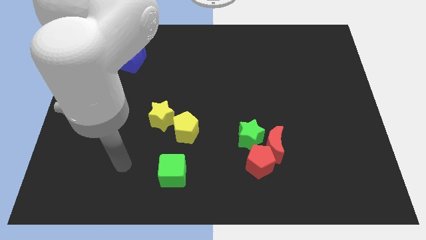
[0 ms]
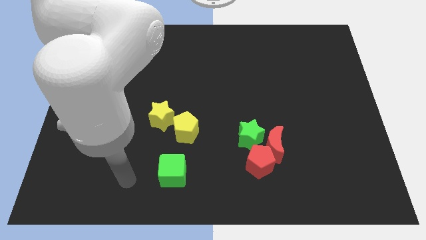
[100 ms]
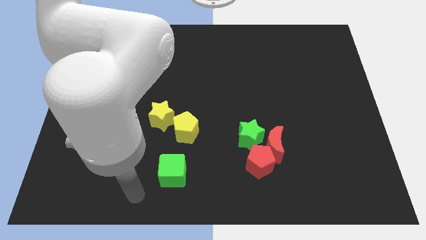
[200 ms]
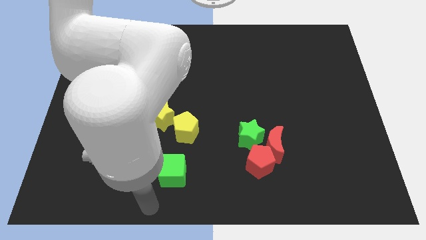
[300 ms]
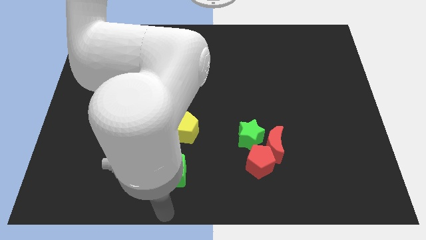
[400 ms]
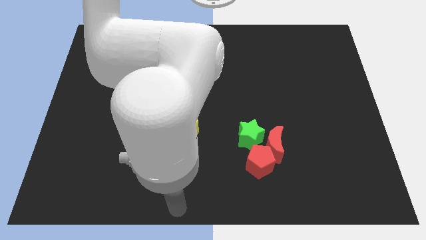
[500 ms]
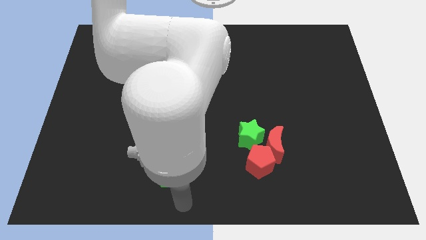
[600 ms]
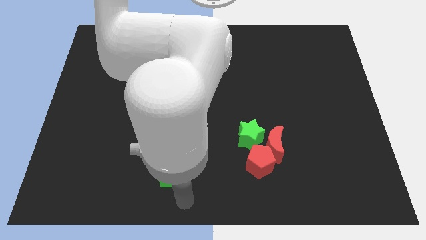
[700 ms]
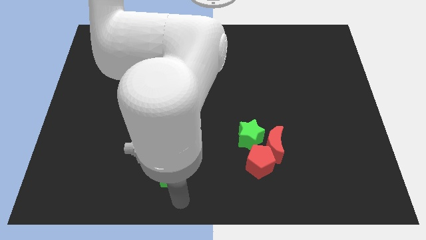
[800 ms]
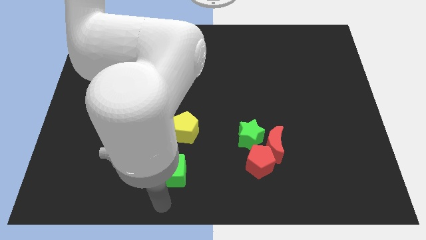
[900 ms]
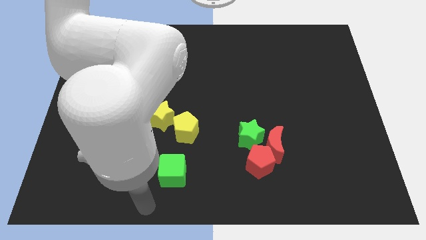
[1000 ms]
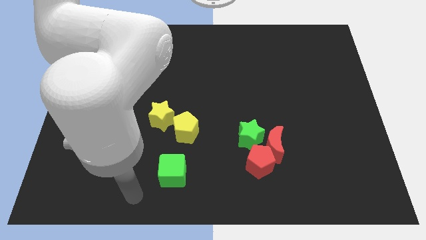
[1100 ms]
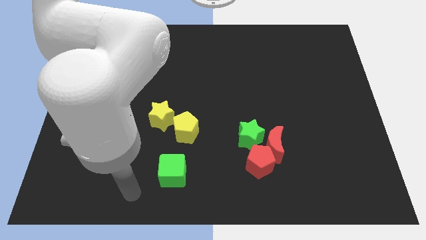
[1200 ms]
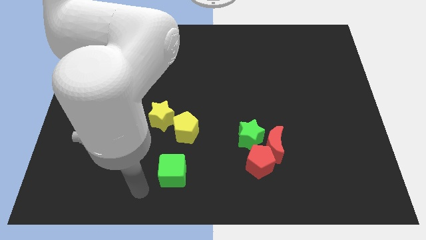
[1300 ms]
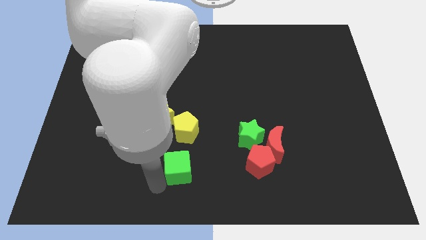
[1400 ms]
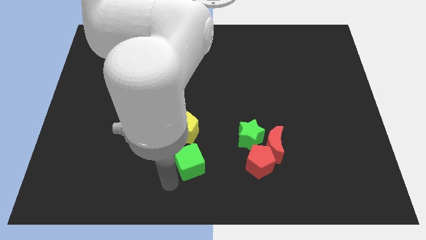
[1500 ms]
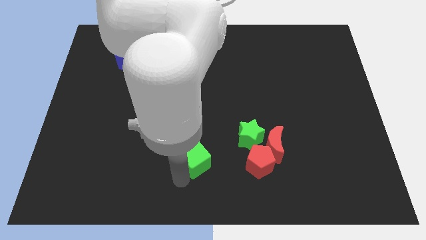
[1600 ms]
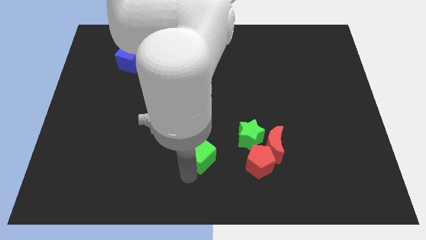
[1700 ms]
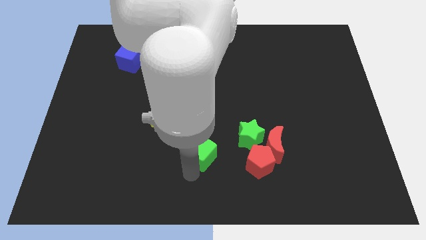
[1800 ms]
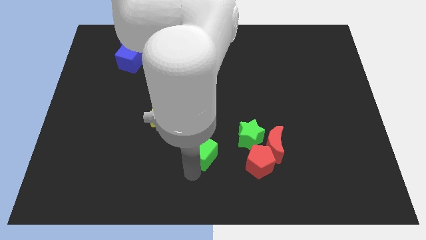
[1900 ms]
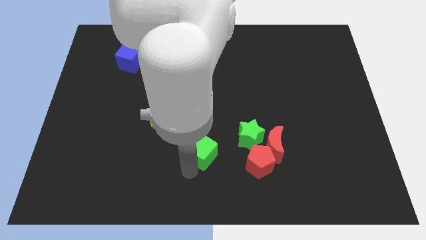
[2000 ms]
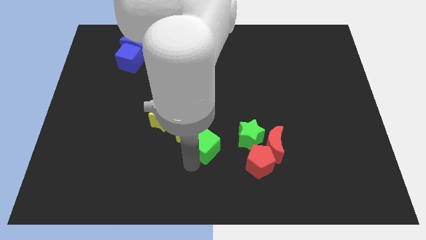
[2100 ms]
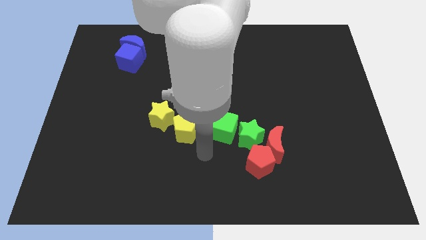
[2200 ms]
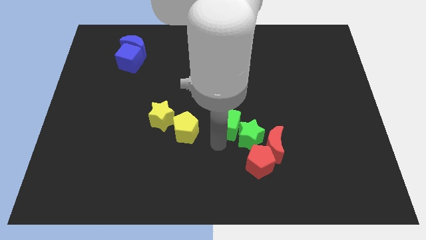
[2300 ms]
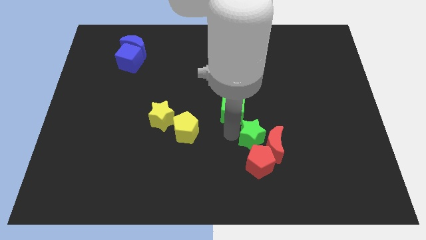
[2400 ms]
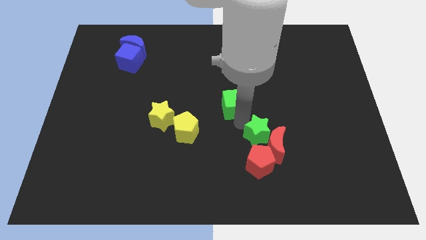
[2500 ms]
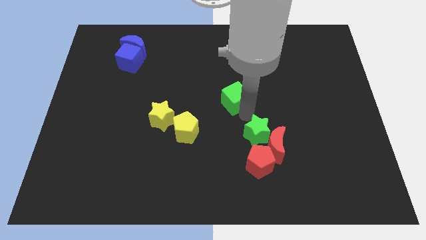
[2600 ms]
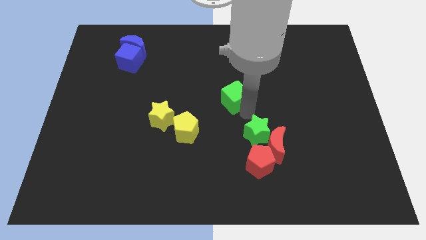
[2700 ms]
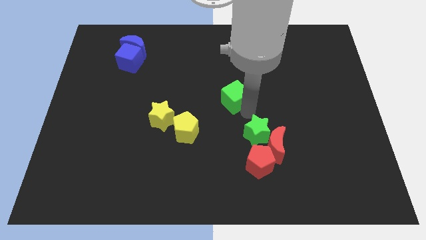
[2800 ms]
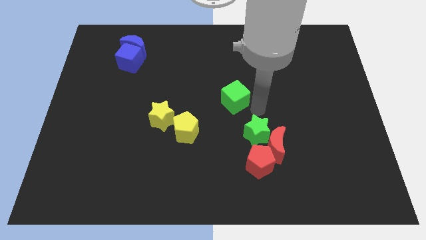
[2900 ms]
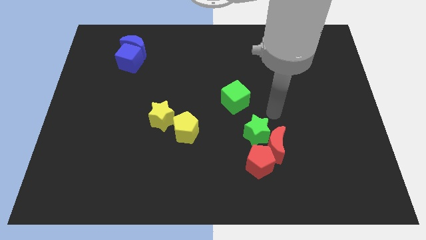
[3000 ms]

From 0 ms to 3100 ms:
place the green cube towards the top left side of the green star

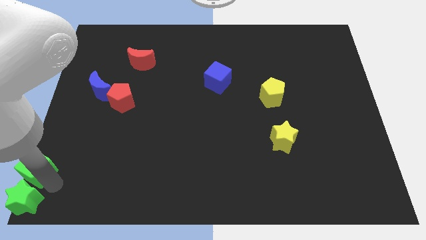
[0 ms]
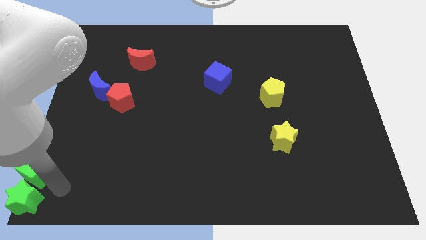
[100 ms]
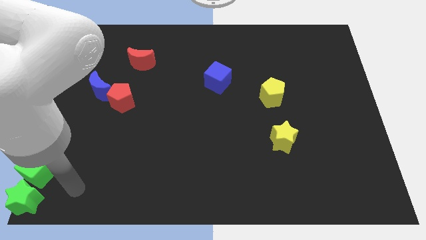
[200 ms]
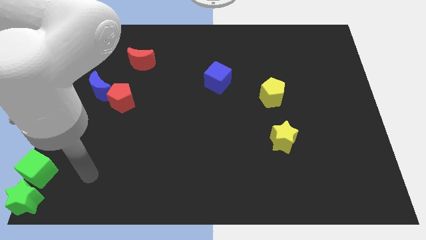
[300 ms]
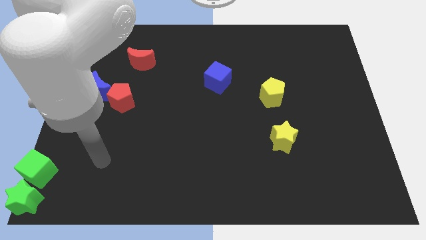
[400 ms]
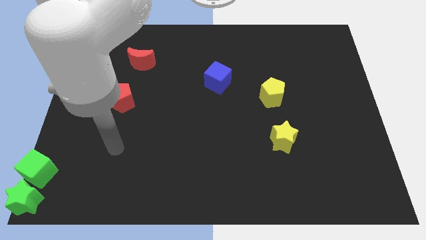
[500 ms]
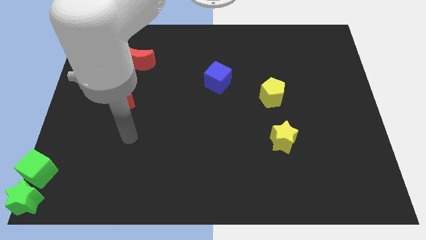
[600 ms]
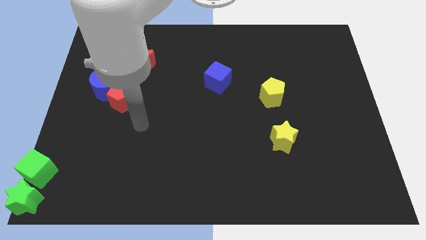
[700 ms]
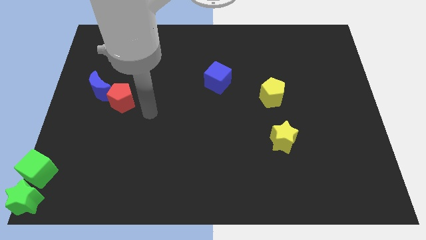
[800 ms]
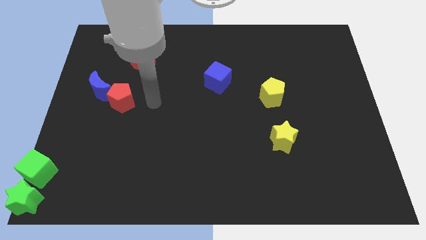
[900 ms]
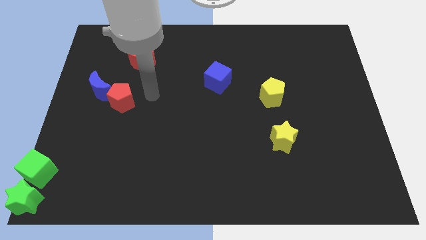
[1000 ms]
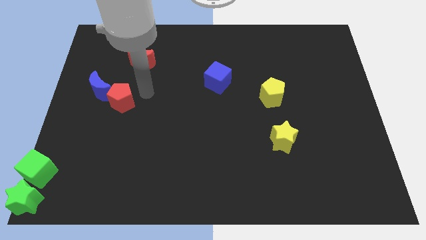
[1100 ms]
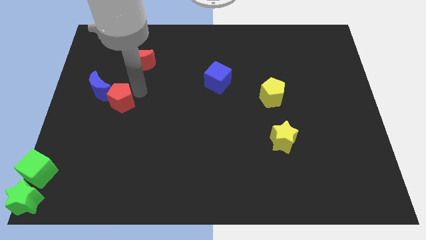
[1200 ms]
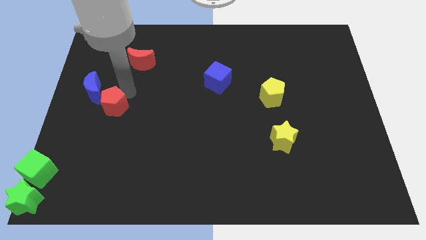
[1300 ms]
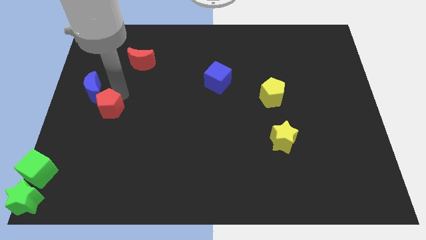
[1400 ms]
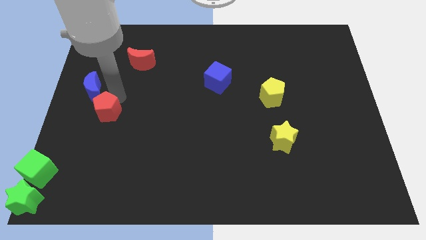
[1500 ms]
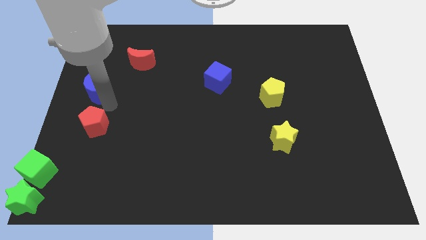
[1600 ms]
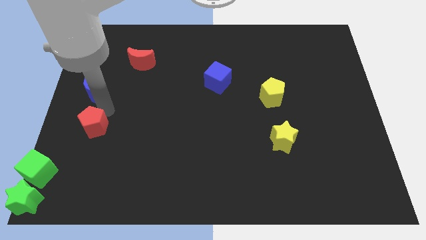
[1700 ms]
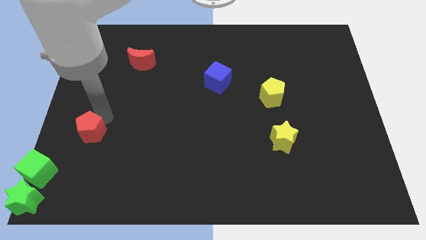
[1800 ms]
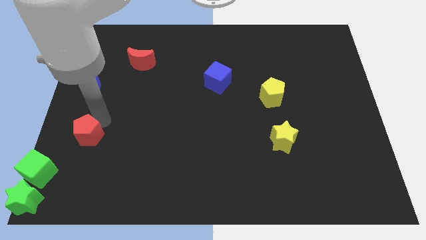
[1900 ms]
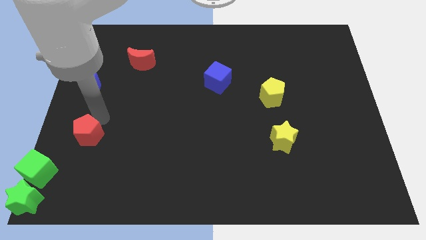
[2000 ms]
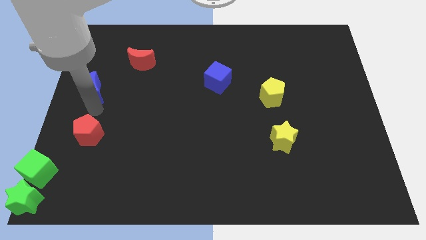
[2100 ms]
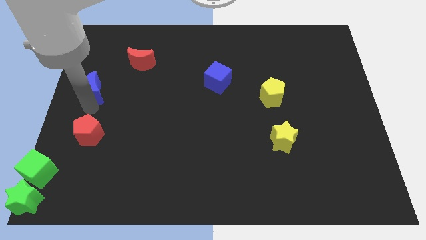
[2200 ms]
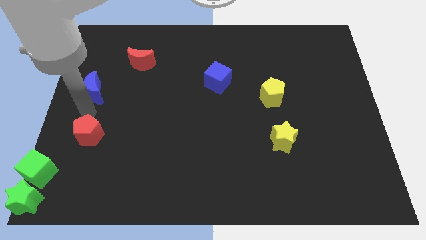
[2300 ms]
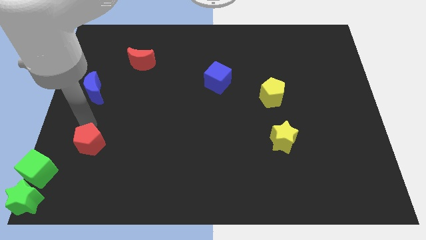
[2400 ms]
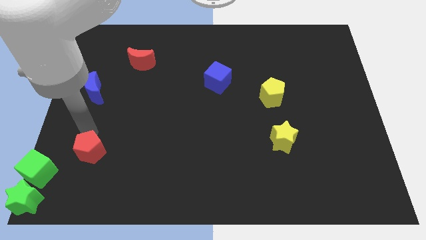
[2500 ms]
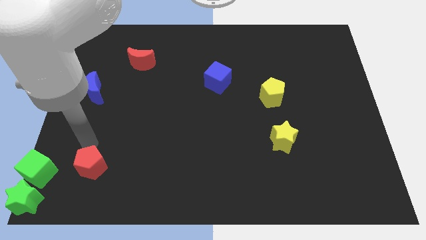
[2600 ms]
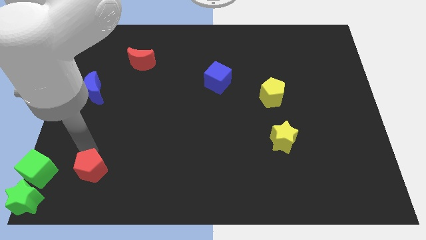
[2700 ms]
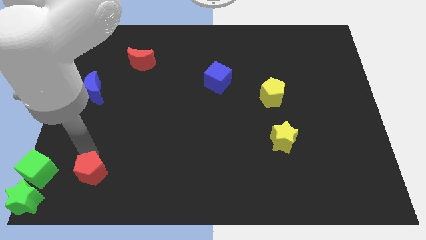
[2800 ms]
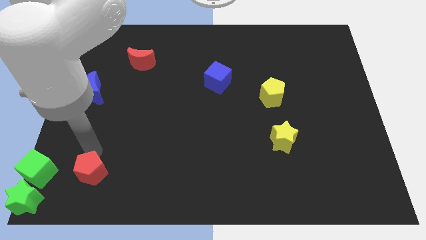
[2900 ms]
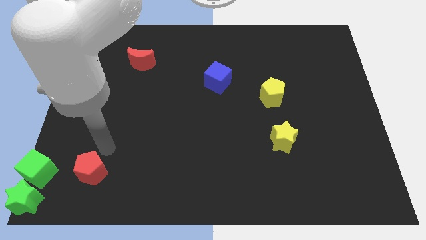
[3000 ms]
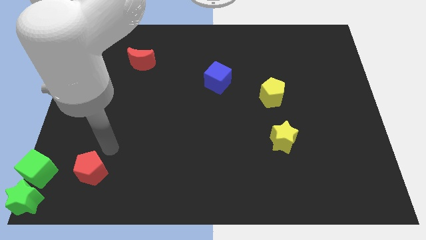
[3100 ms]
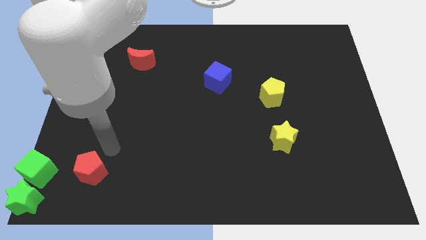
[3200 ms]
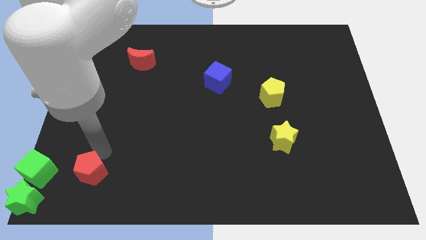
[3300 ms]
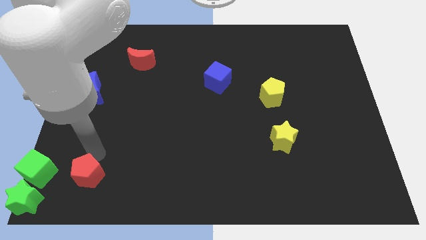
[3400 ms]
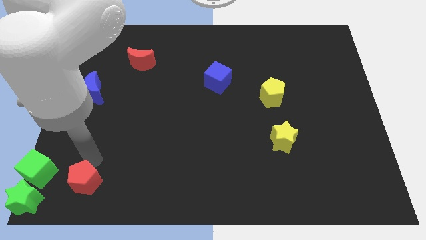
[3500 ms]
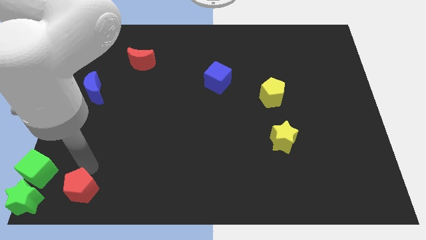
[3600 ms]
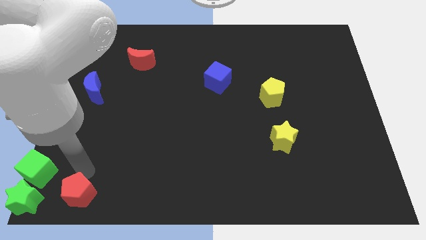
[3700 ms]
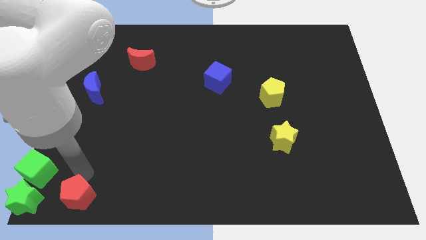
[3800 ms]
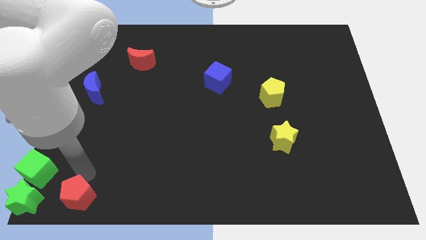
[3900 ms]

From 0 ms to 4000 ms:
separate the red pentagon from the blue moon

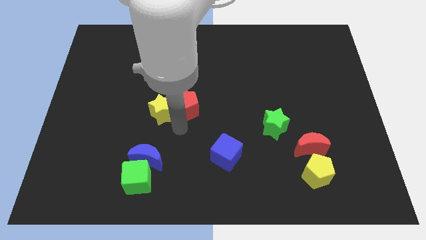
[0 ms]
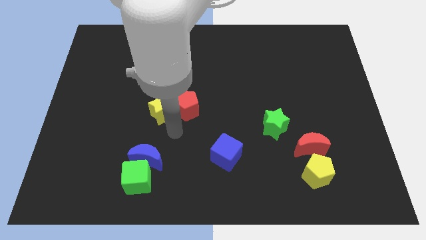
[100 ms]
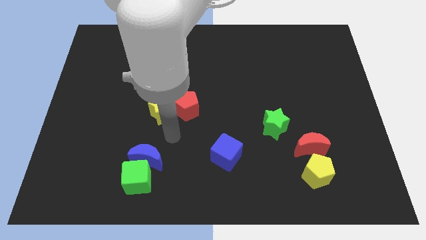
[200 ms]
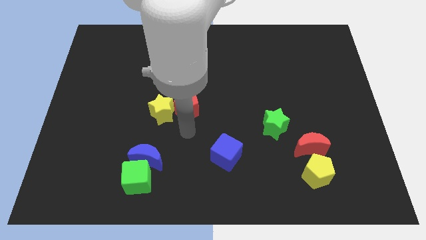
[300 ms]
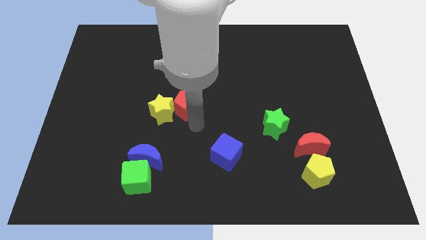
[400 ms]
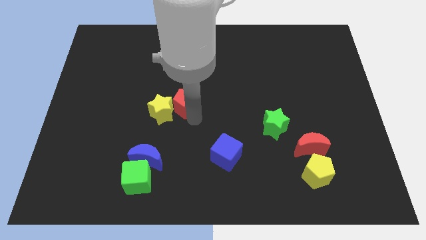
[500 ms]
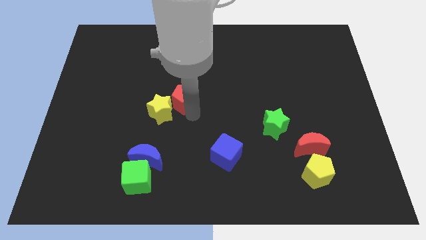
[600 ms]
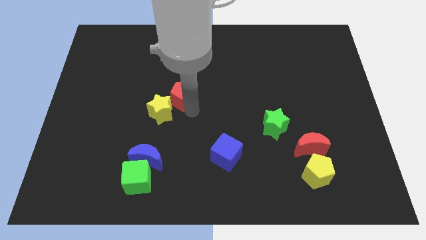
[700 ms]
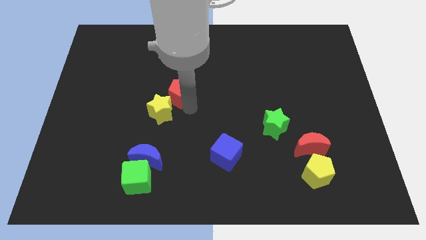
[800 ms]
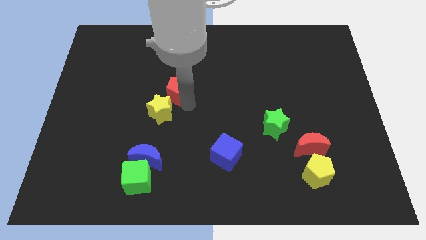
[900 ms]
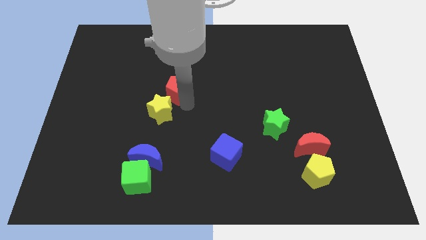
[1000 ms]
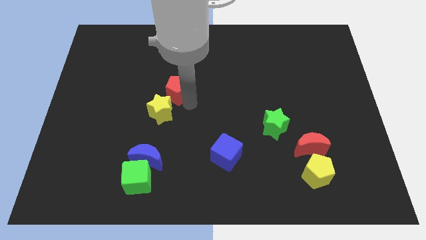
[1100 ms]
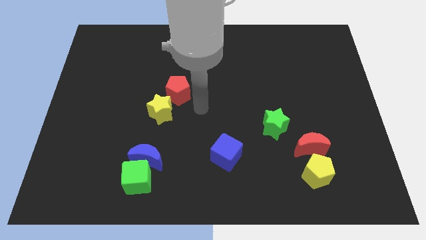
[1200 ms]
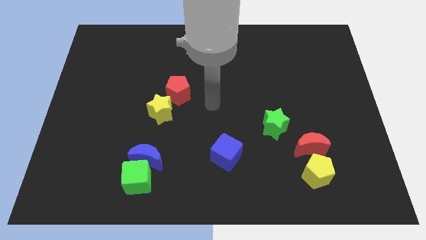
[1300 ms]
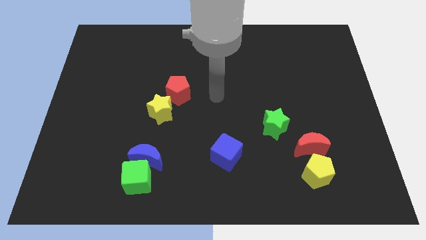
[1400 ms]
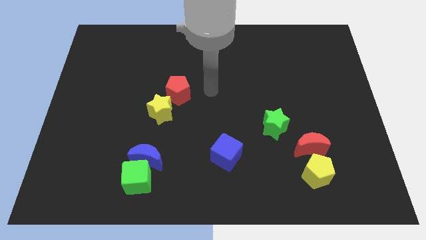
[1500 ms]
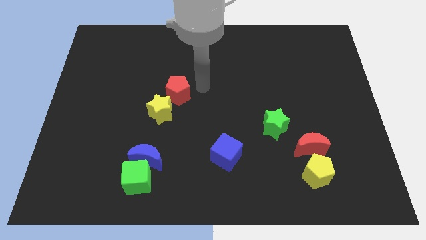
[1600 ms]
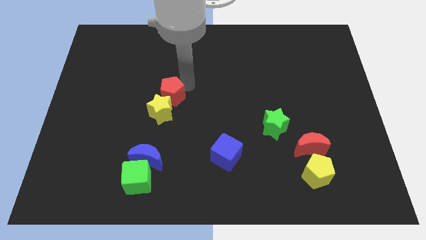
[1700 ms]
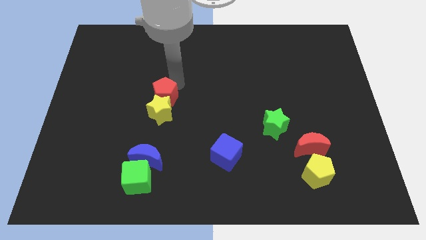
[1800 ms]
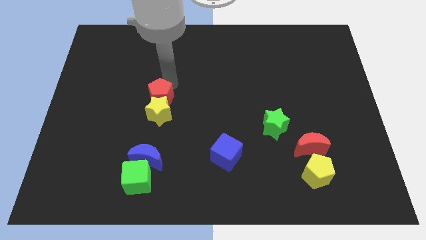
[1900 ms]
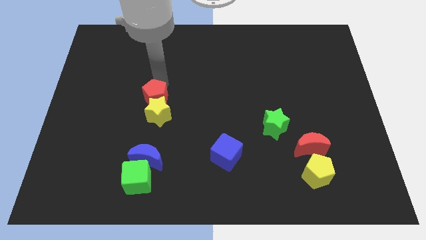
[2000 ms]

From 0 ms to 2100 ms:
put the red pentagon on the top of the yellow star
